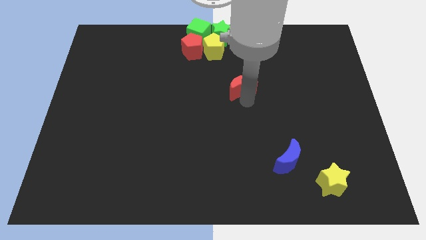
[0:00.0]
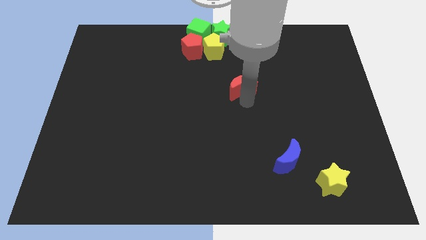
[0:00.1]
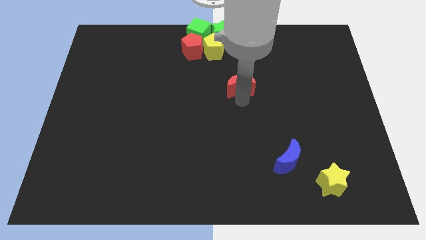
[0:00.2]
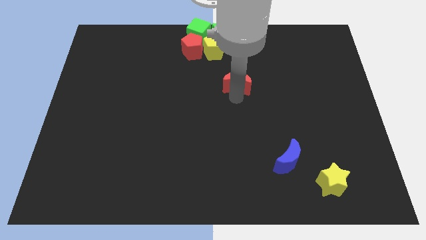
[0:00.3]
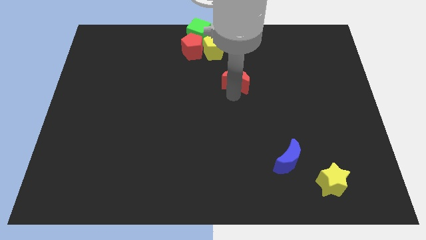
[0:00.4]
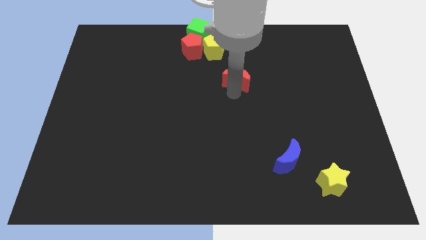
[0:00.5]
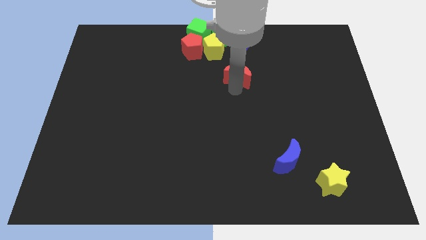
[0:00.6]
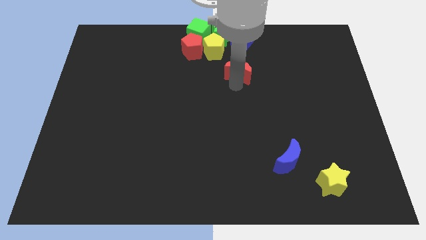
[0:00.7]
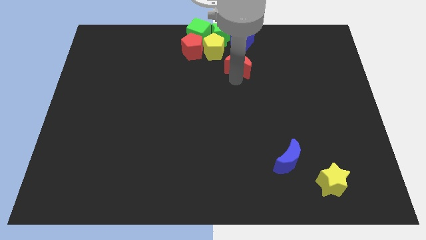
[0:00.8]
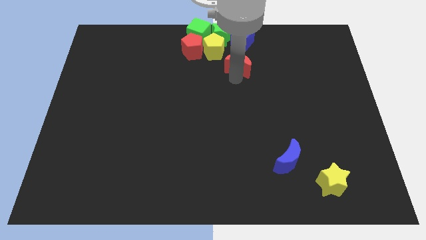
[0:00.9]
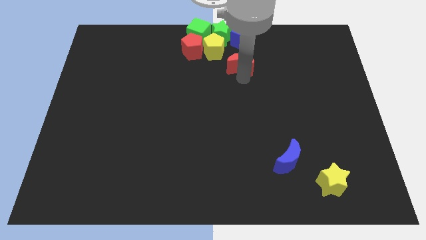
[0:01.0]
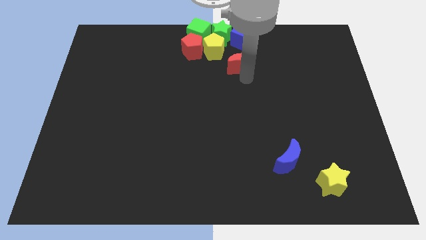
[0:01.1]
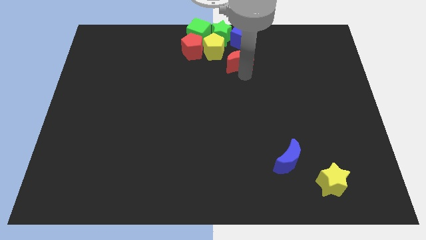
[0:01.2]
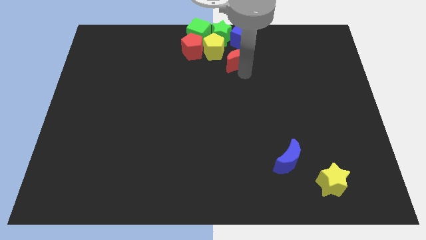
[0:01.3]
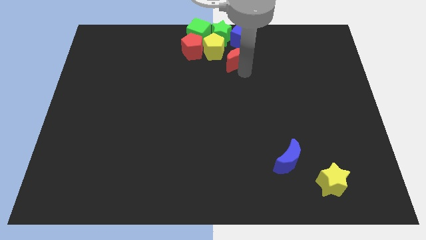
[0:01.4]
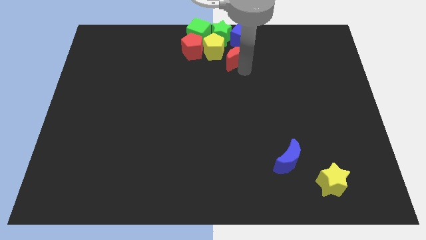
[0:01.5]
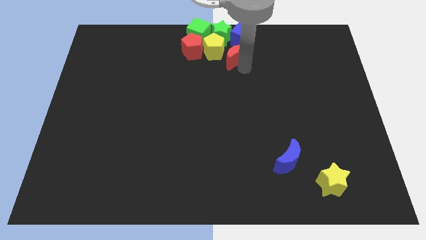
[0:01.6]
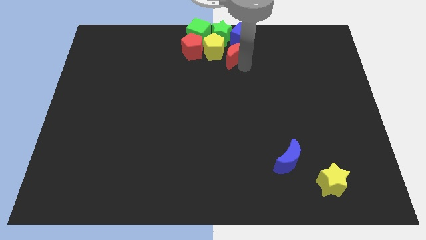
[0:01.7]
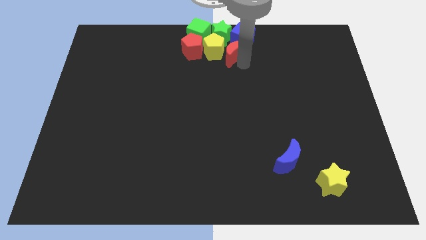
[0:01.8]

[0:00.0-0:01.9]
place red crescent in between the blue cube and yellow pentagon

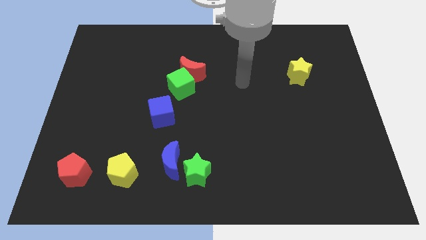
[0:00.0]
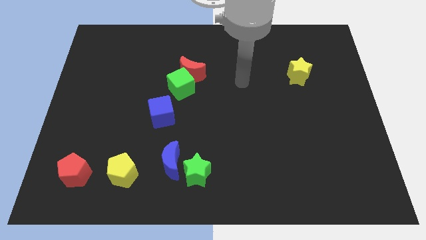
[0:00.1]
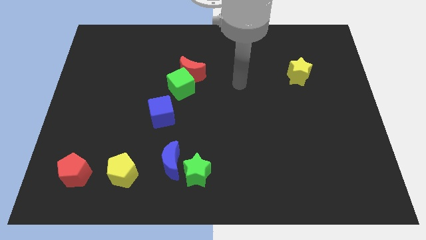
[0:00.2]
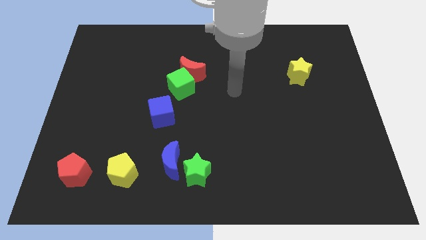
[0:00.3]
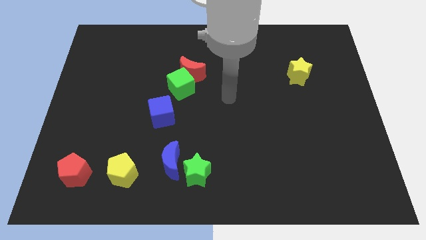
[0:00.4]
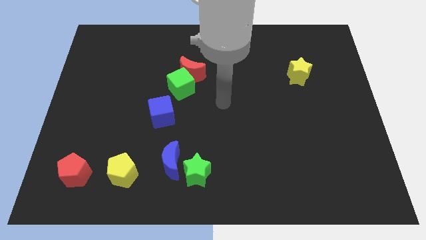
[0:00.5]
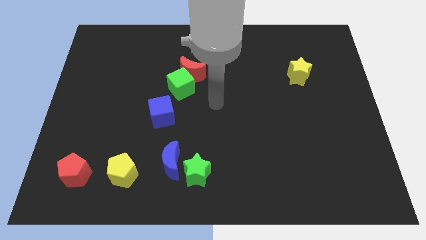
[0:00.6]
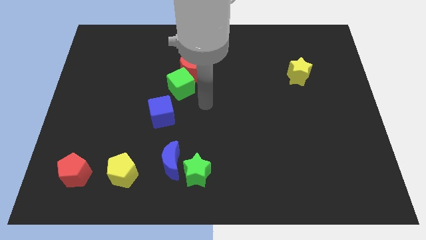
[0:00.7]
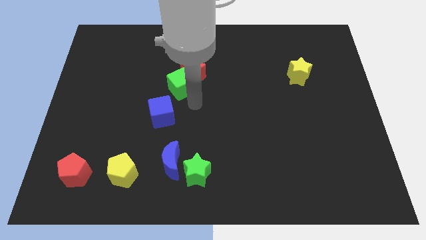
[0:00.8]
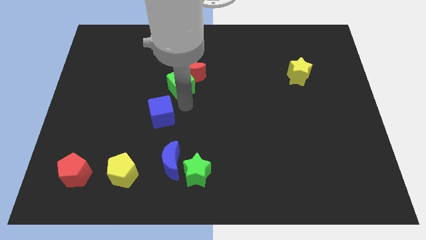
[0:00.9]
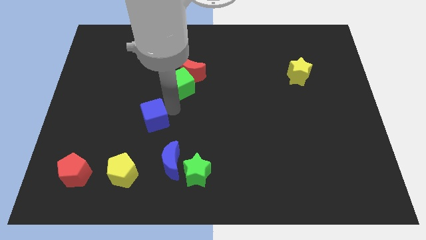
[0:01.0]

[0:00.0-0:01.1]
tap the right side of the blue cube

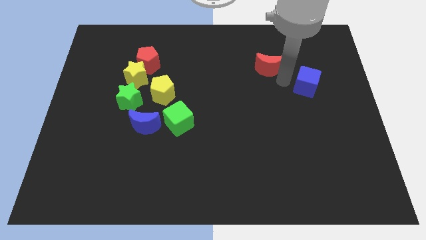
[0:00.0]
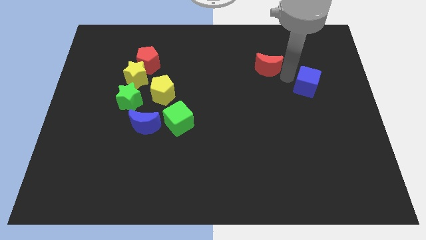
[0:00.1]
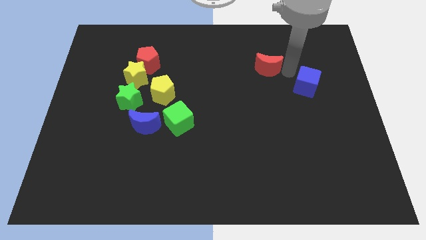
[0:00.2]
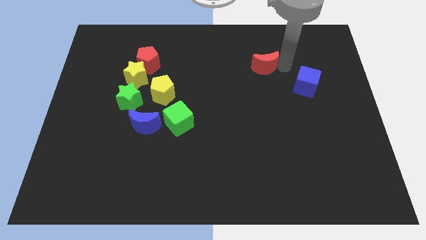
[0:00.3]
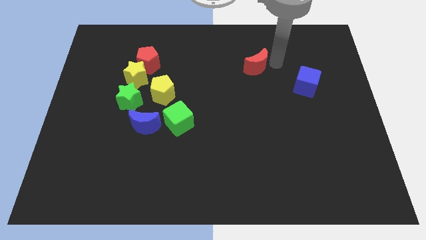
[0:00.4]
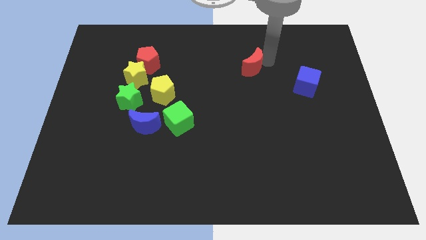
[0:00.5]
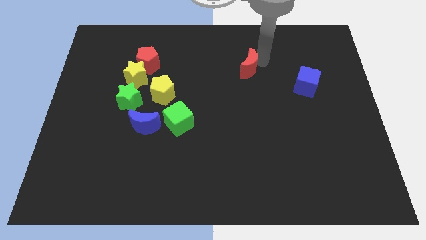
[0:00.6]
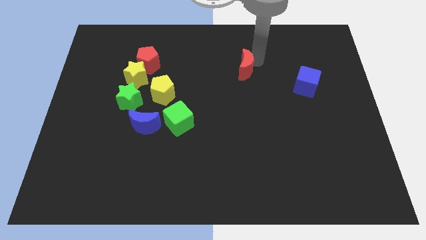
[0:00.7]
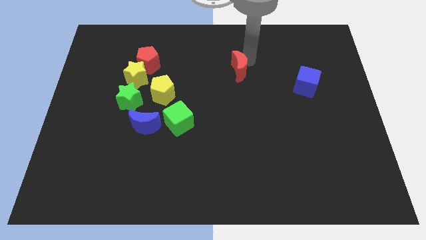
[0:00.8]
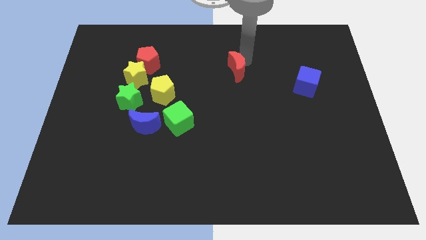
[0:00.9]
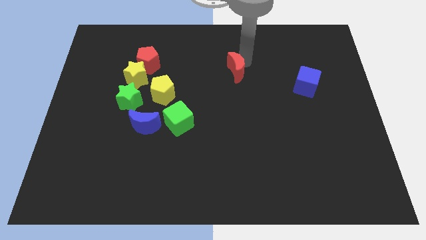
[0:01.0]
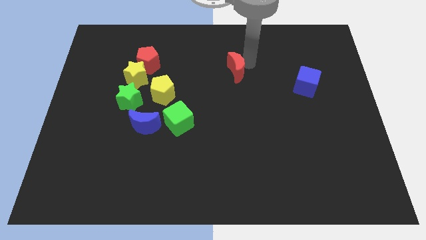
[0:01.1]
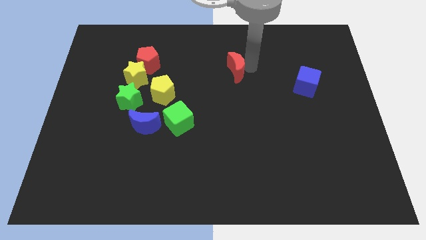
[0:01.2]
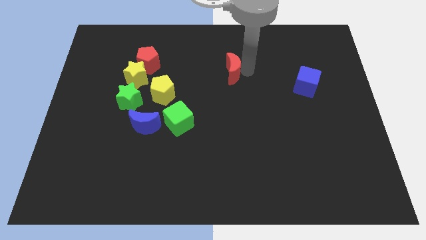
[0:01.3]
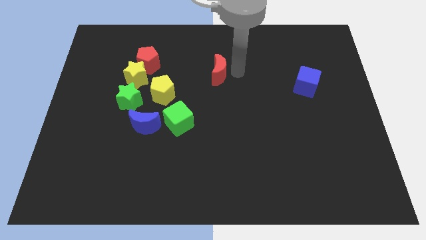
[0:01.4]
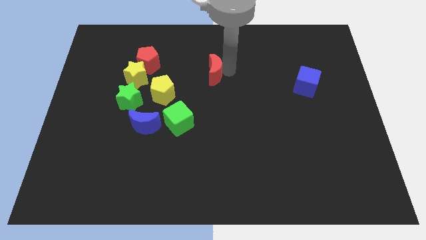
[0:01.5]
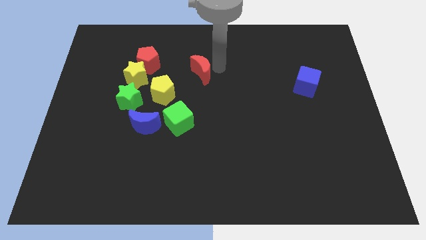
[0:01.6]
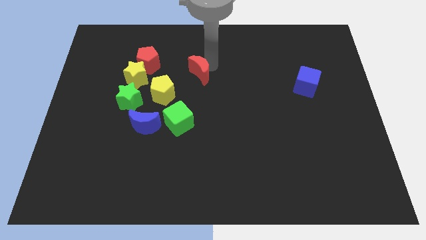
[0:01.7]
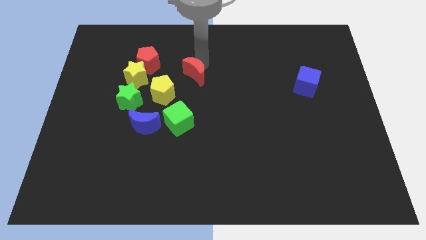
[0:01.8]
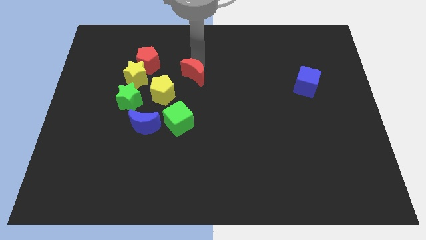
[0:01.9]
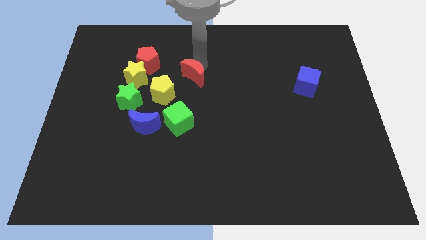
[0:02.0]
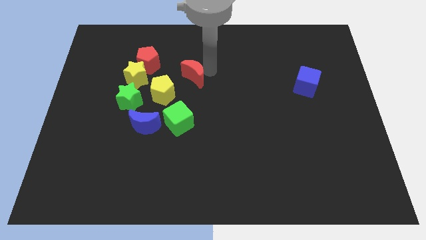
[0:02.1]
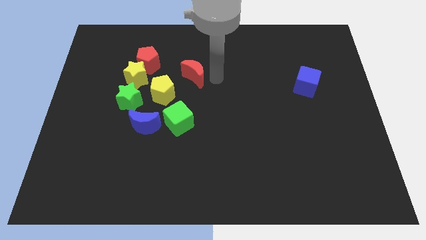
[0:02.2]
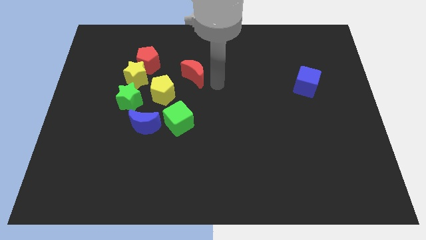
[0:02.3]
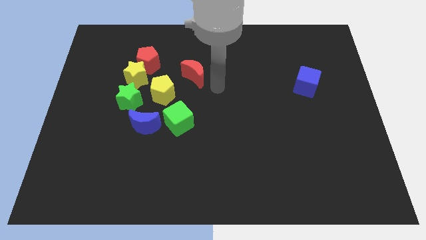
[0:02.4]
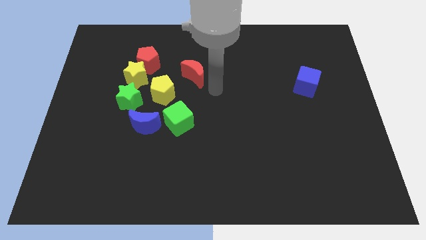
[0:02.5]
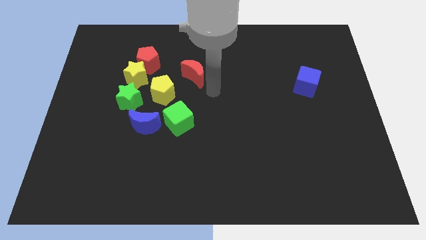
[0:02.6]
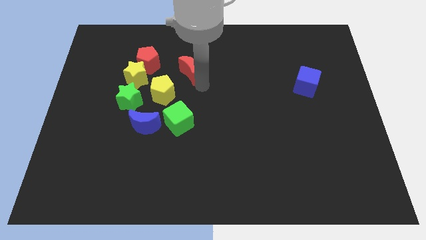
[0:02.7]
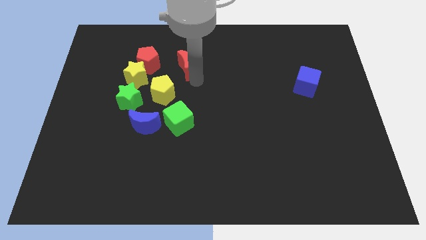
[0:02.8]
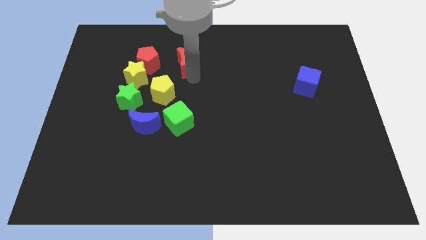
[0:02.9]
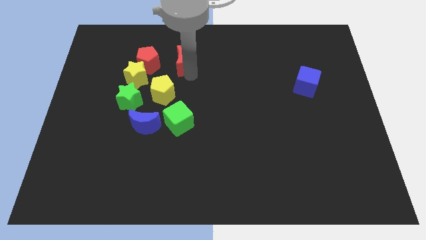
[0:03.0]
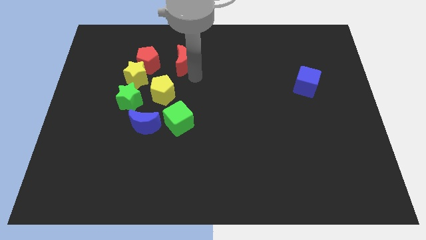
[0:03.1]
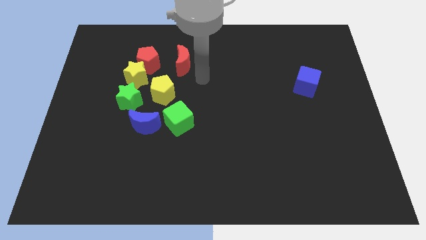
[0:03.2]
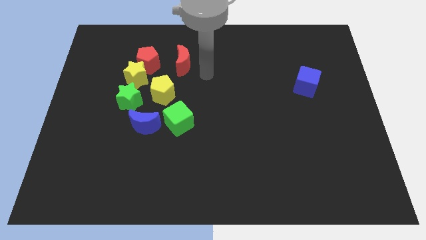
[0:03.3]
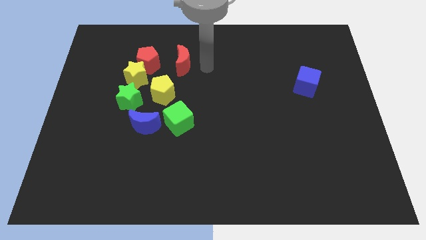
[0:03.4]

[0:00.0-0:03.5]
move the red crescent right to the red pentagon

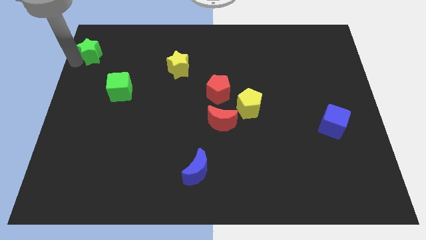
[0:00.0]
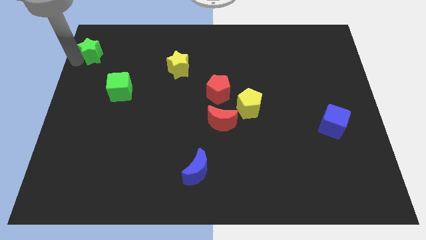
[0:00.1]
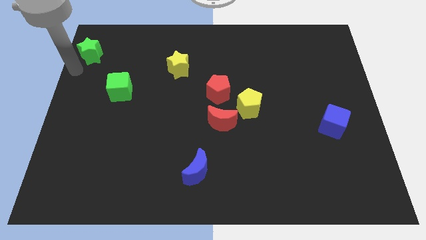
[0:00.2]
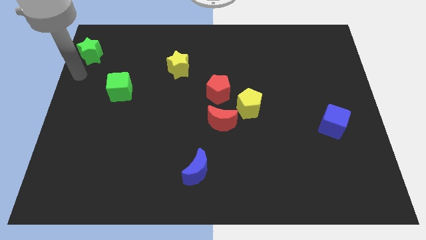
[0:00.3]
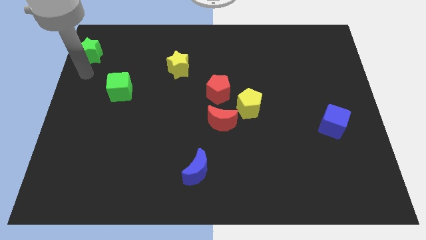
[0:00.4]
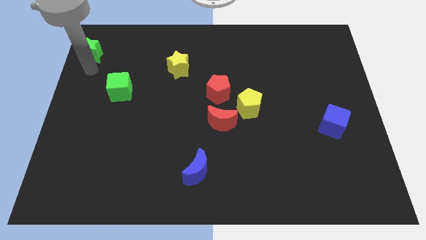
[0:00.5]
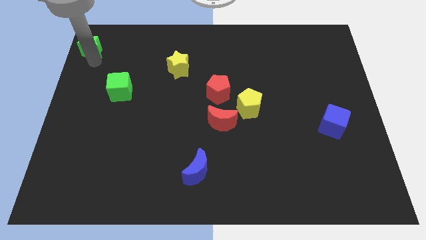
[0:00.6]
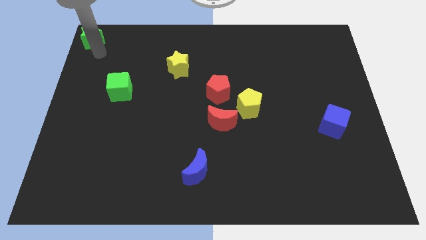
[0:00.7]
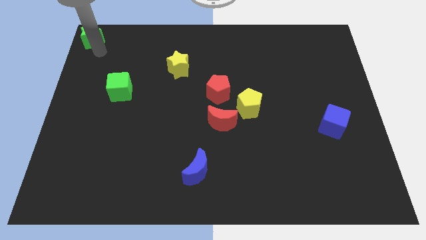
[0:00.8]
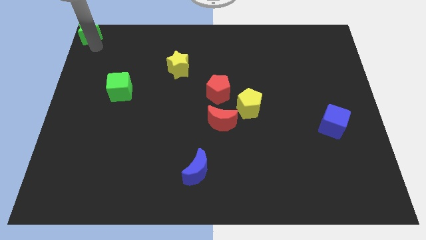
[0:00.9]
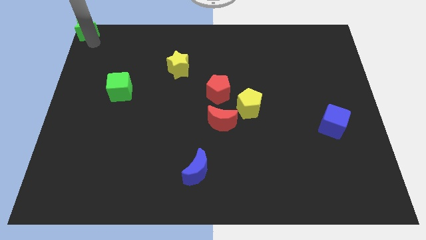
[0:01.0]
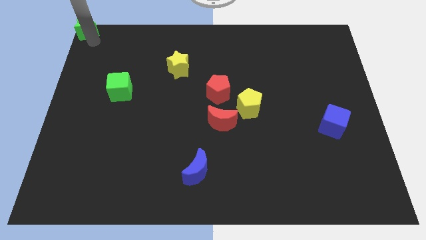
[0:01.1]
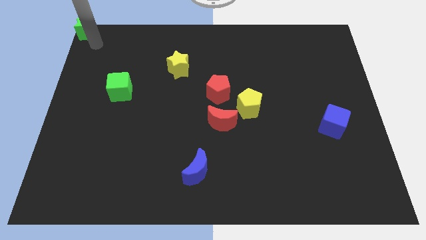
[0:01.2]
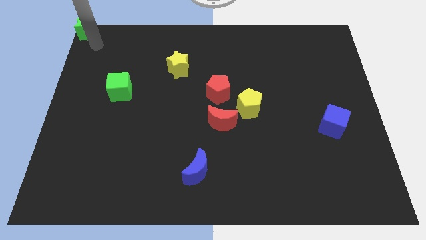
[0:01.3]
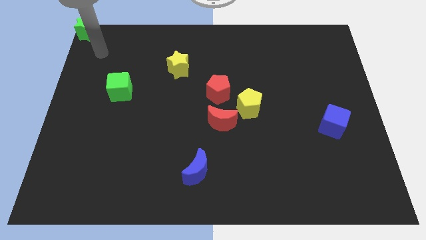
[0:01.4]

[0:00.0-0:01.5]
move the green star to the top left corner of the board

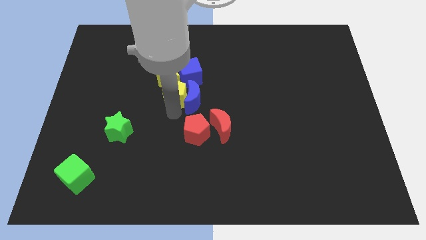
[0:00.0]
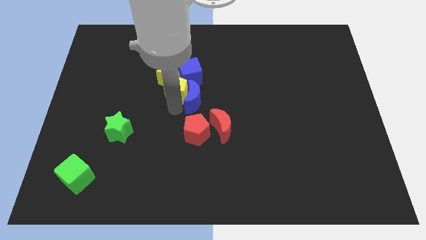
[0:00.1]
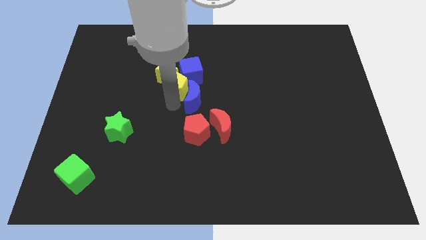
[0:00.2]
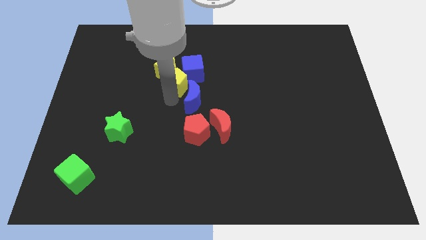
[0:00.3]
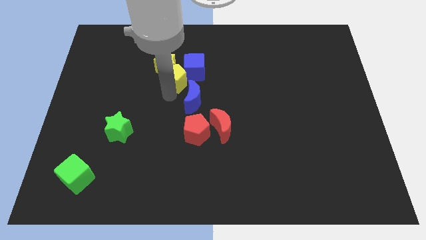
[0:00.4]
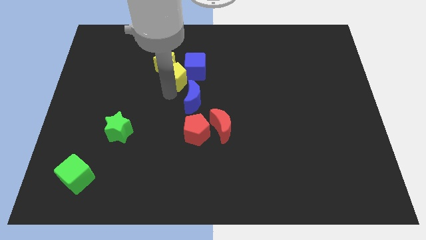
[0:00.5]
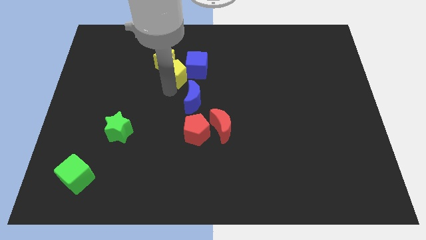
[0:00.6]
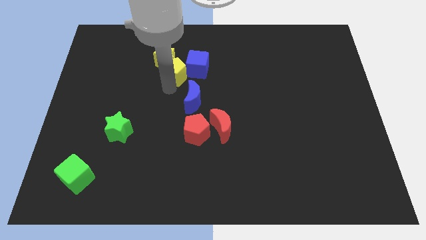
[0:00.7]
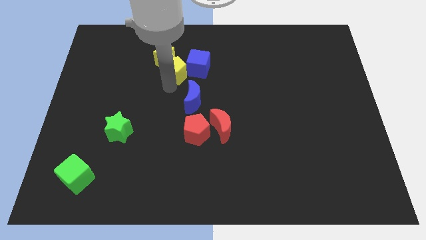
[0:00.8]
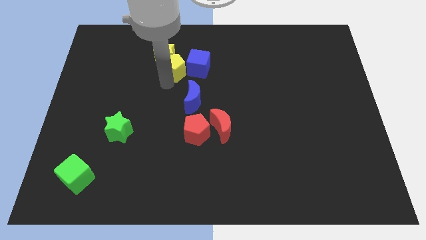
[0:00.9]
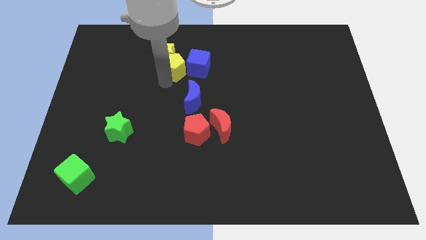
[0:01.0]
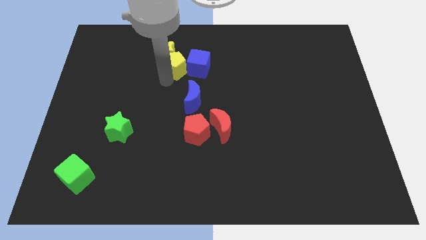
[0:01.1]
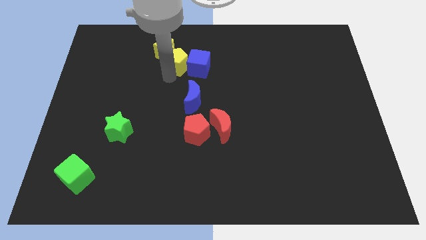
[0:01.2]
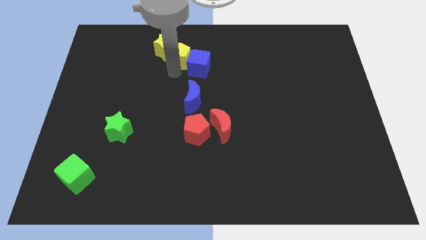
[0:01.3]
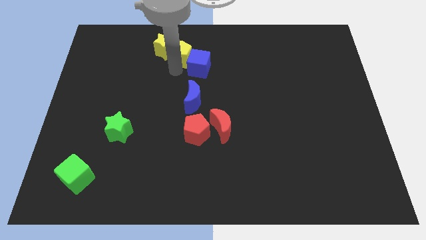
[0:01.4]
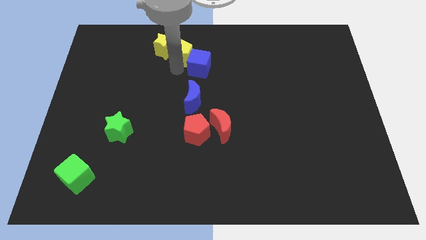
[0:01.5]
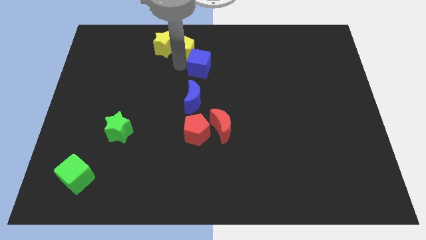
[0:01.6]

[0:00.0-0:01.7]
push yellow pentagon slightly towards up
